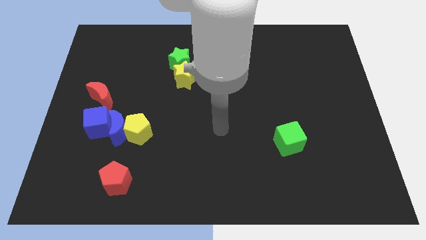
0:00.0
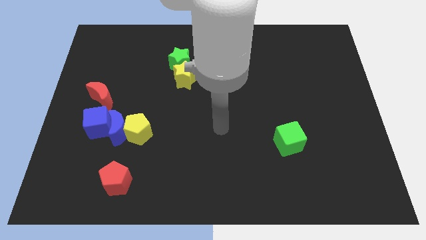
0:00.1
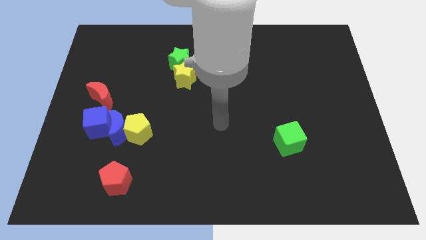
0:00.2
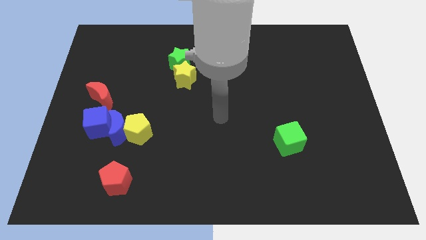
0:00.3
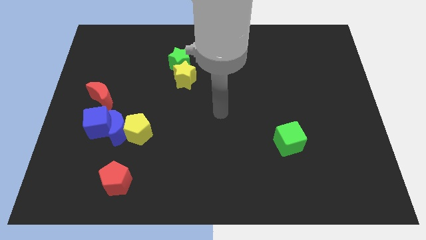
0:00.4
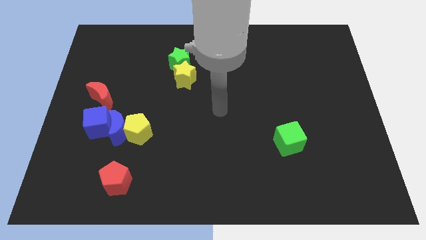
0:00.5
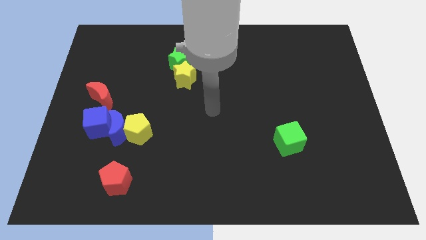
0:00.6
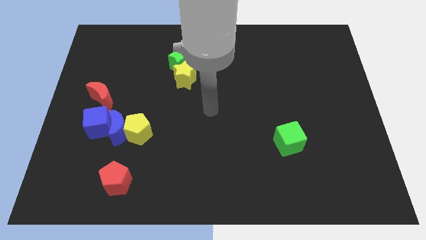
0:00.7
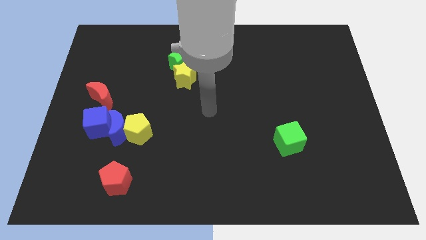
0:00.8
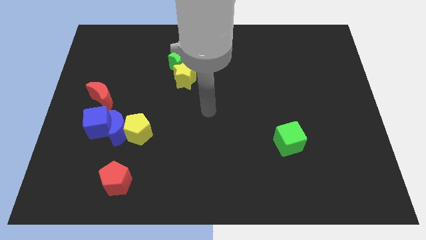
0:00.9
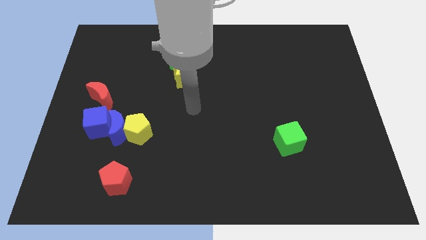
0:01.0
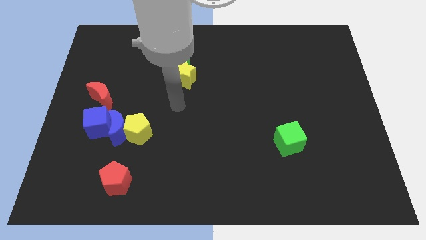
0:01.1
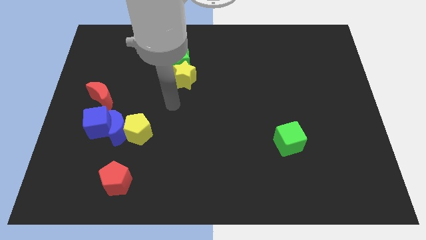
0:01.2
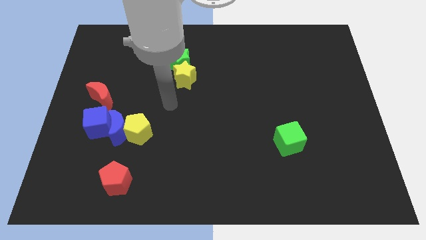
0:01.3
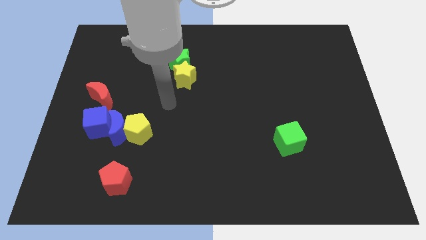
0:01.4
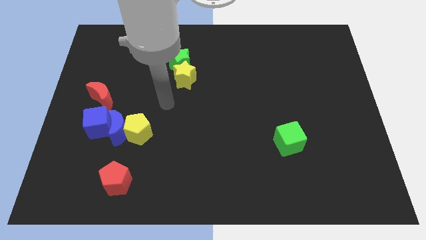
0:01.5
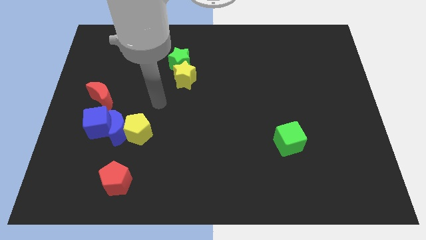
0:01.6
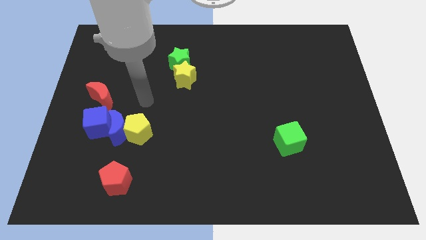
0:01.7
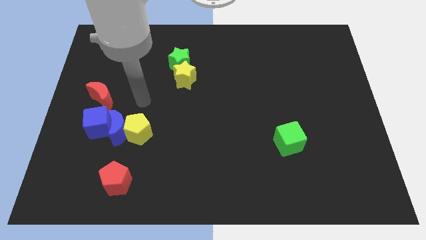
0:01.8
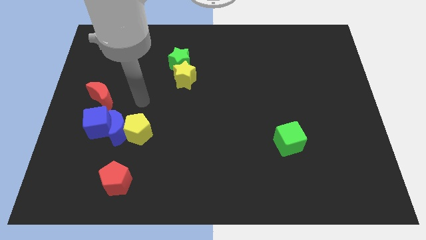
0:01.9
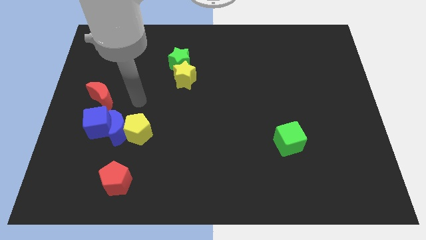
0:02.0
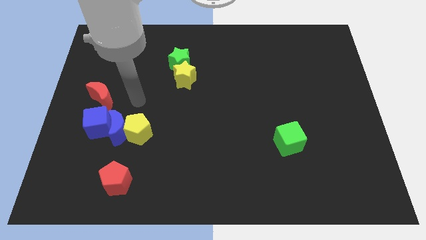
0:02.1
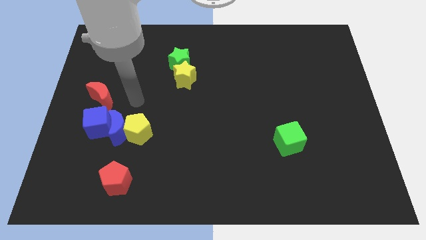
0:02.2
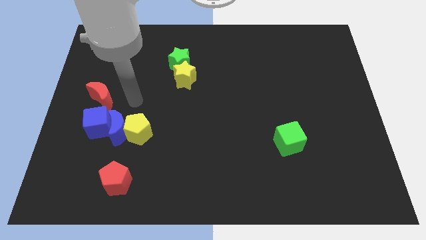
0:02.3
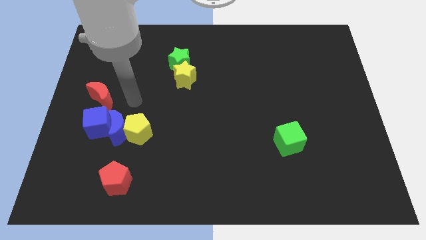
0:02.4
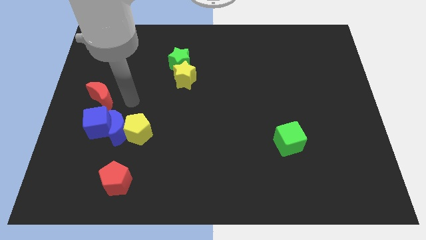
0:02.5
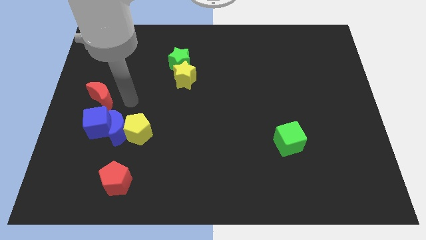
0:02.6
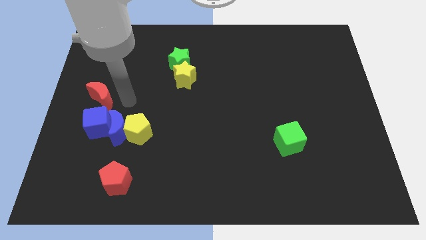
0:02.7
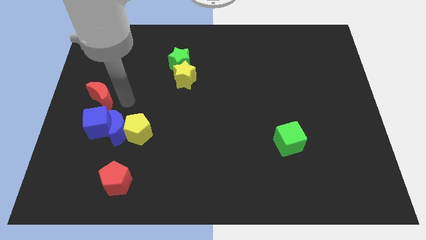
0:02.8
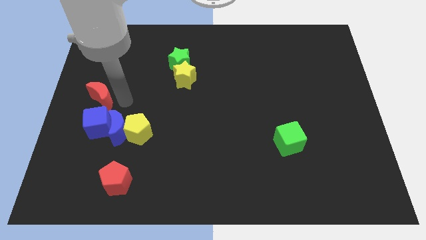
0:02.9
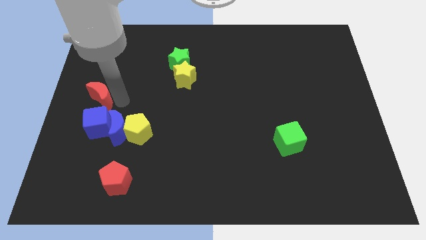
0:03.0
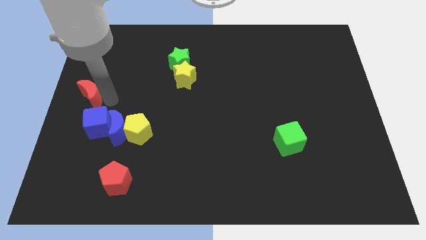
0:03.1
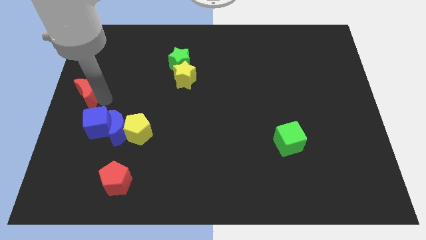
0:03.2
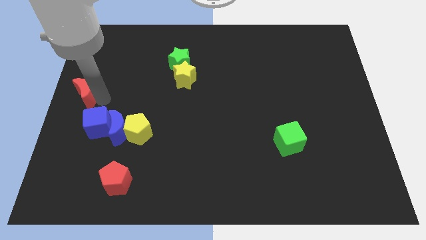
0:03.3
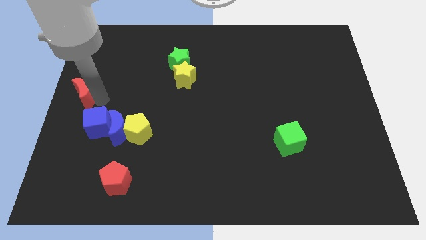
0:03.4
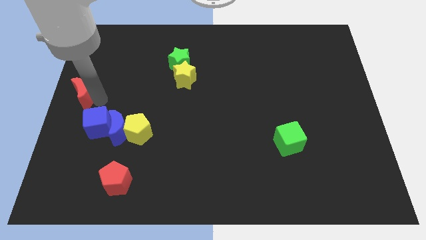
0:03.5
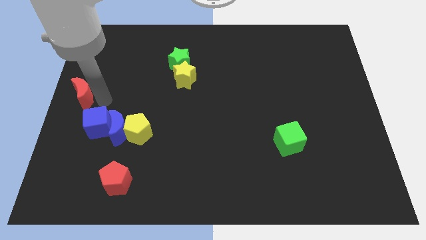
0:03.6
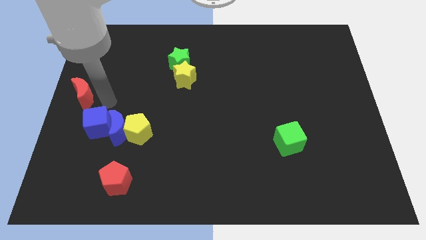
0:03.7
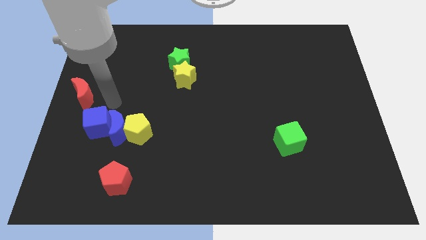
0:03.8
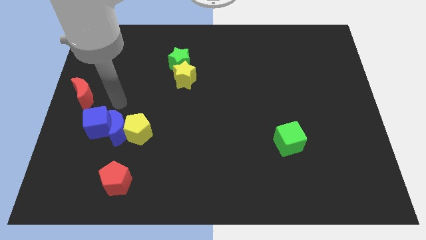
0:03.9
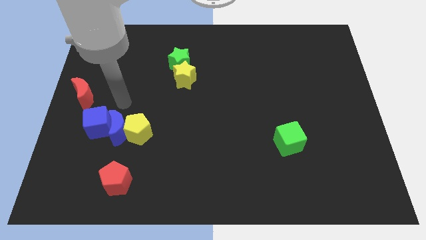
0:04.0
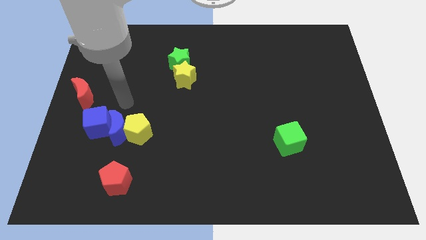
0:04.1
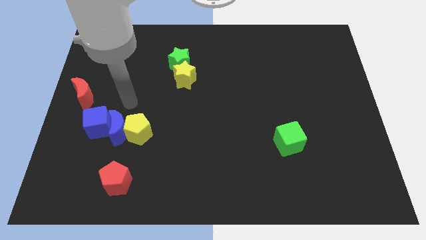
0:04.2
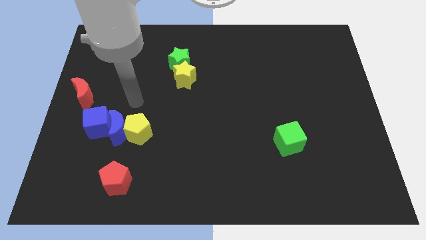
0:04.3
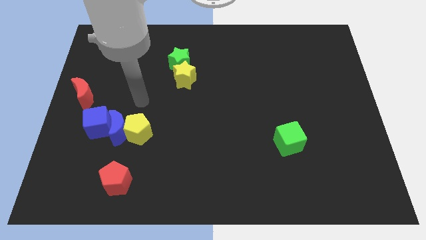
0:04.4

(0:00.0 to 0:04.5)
move the red moon to the center left

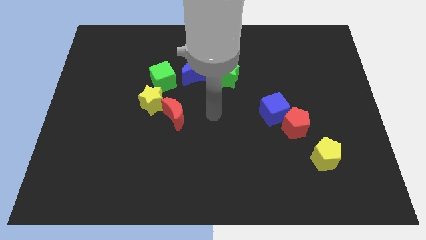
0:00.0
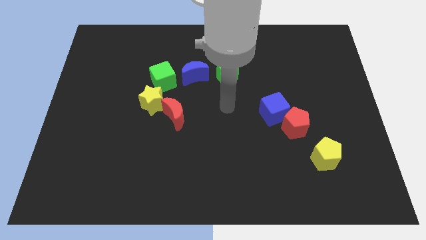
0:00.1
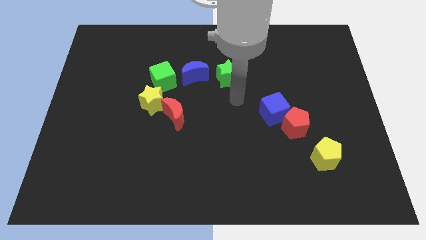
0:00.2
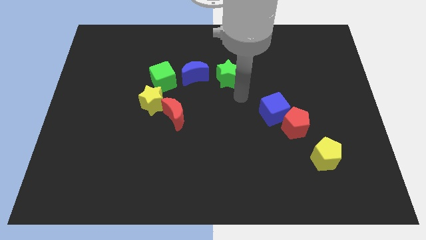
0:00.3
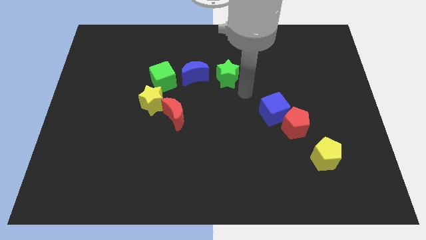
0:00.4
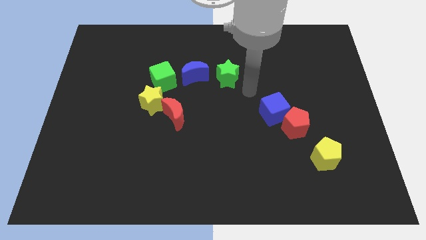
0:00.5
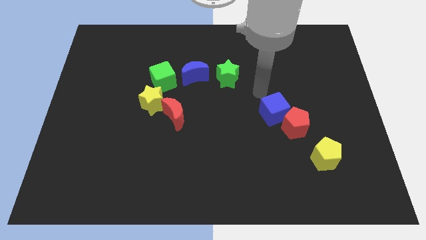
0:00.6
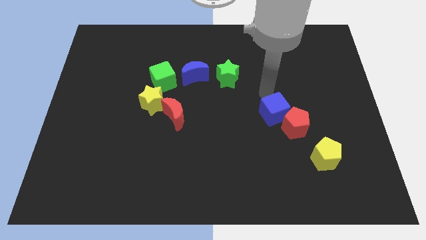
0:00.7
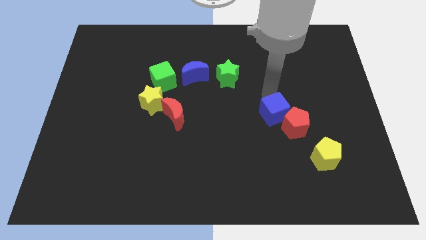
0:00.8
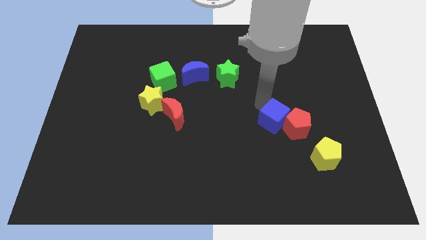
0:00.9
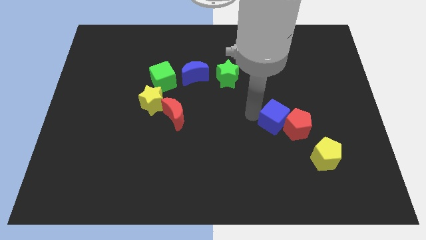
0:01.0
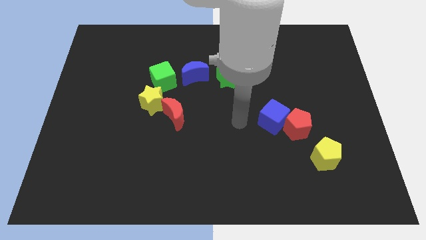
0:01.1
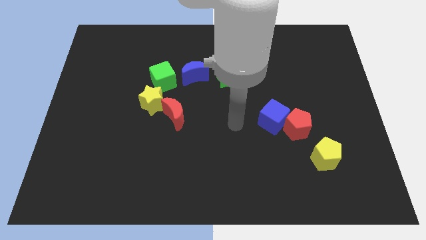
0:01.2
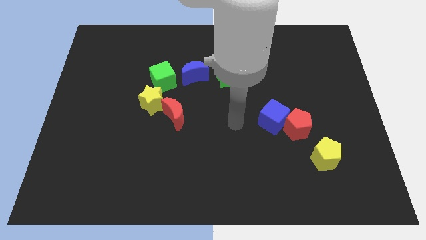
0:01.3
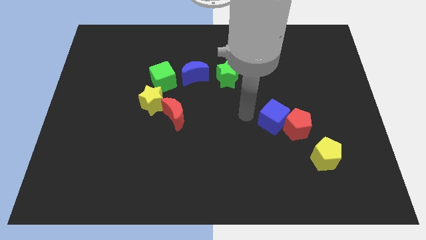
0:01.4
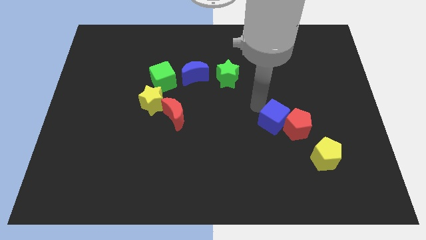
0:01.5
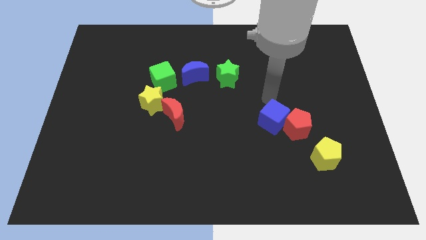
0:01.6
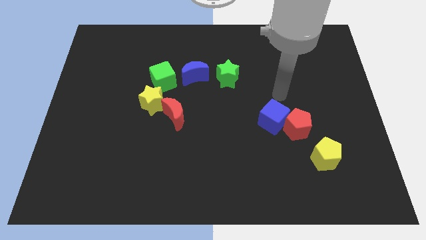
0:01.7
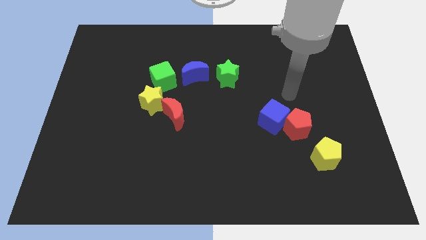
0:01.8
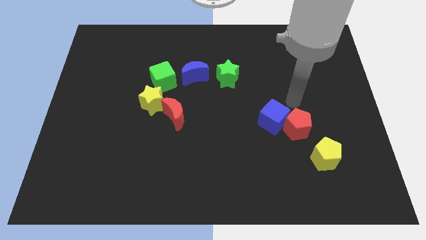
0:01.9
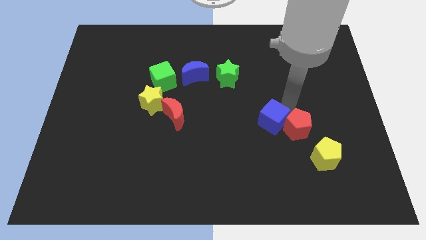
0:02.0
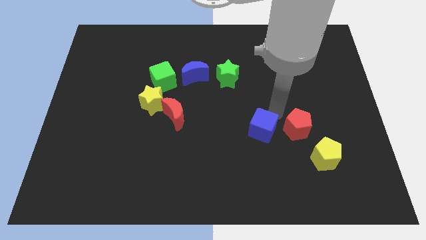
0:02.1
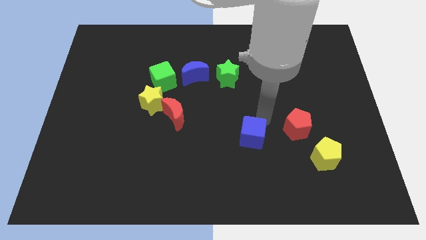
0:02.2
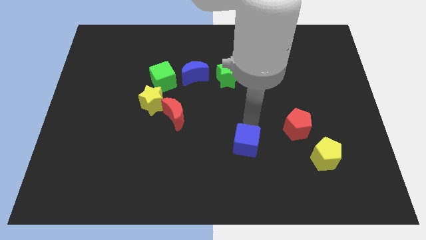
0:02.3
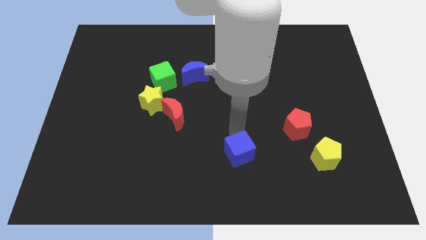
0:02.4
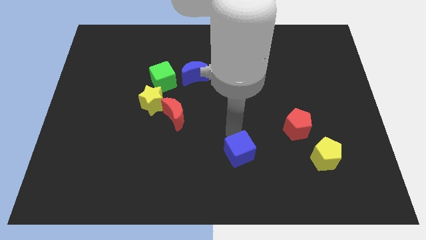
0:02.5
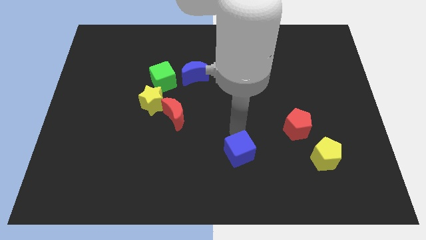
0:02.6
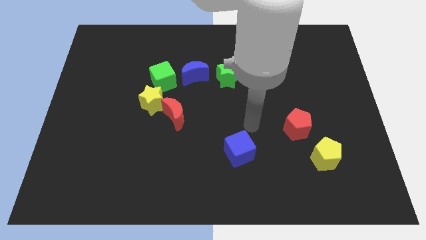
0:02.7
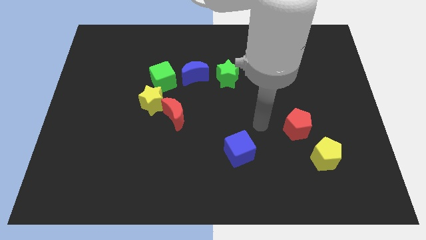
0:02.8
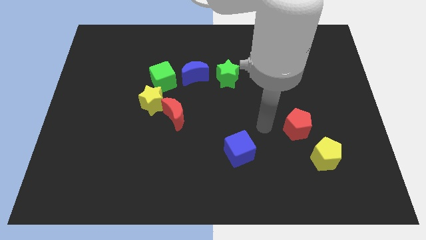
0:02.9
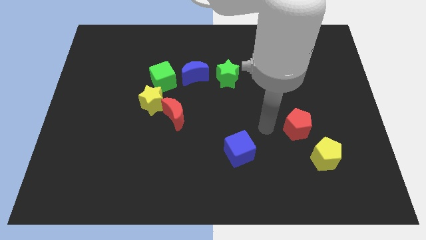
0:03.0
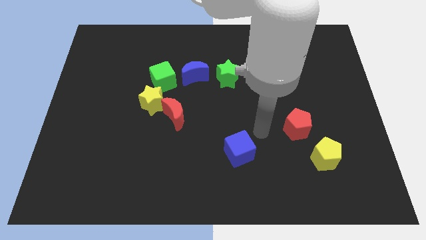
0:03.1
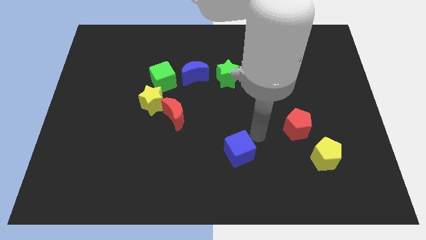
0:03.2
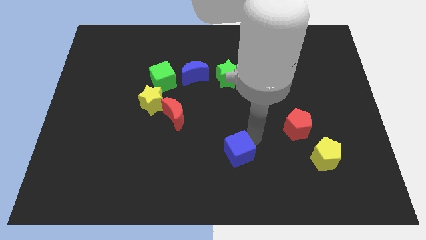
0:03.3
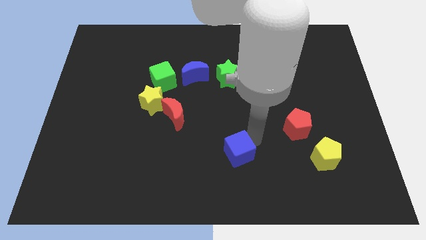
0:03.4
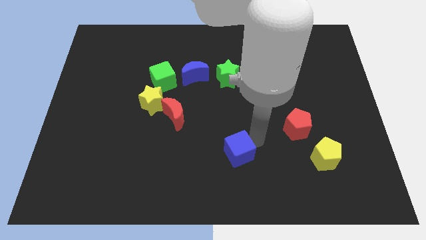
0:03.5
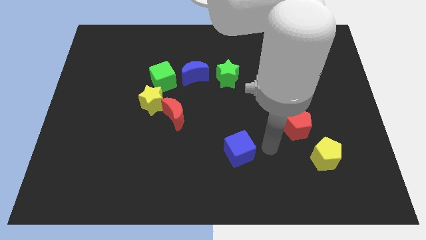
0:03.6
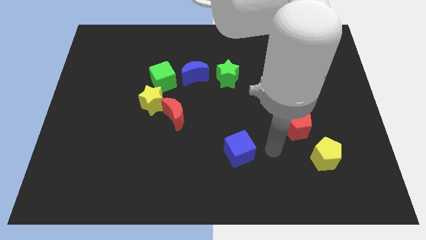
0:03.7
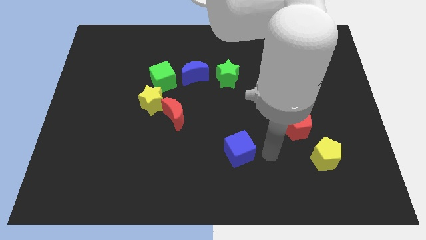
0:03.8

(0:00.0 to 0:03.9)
push the blue cube towards center of the board

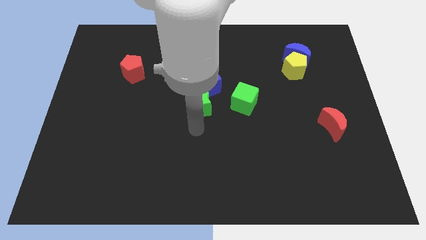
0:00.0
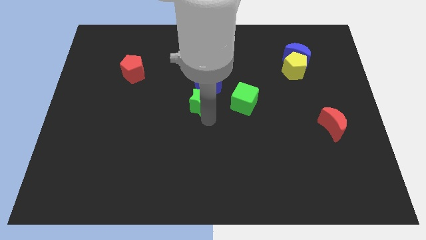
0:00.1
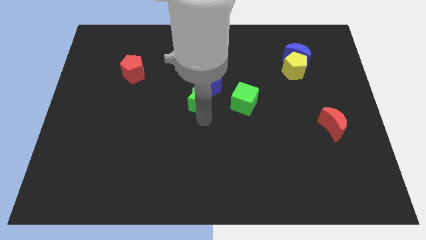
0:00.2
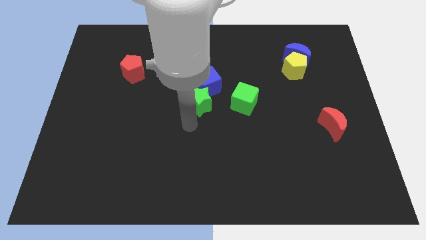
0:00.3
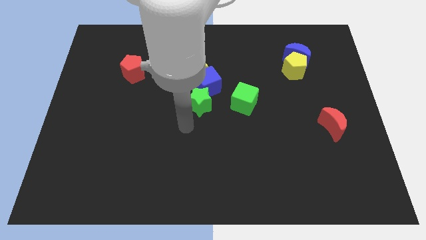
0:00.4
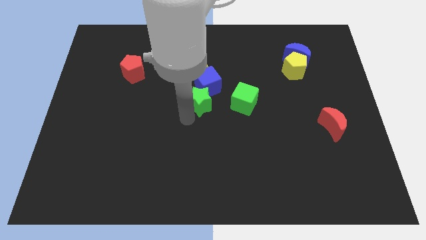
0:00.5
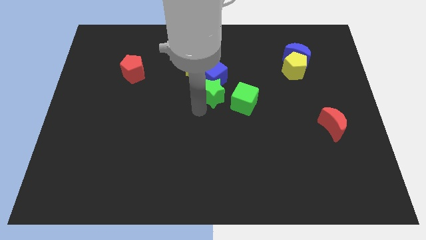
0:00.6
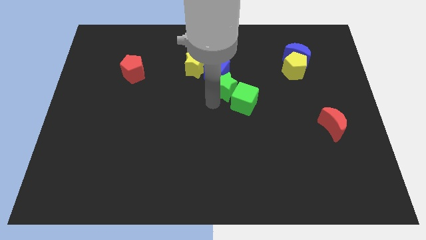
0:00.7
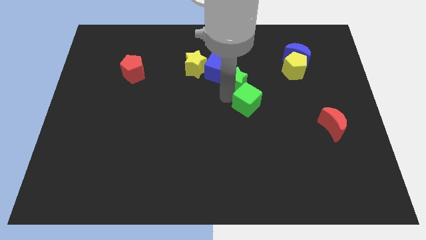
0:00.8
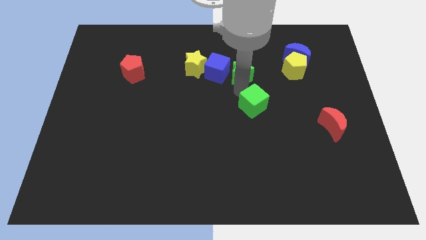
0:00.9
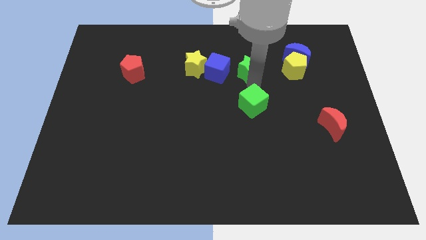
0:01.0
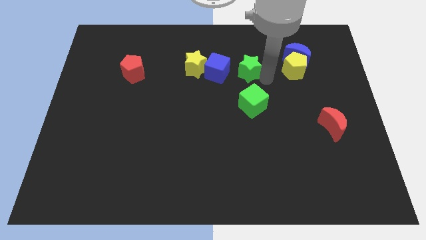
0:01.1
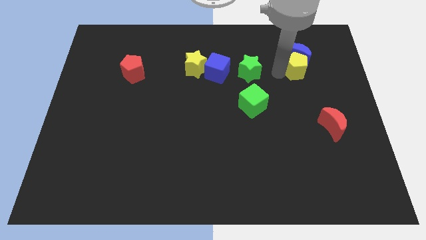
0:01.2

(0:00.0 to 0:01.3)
place green star to the top side of the green cube
